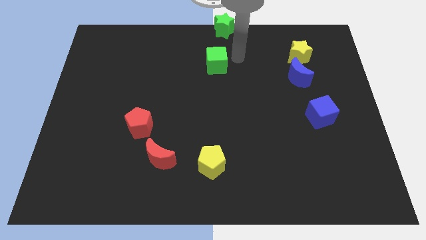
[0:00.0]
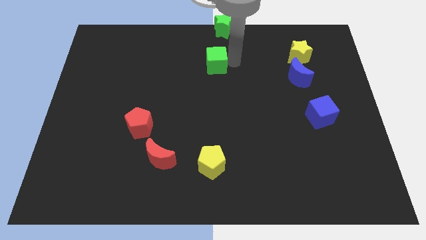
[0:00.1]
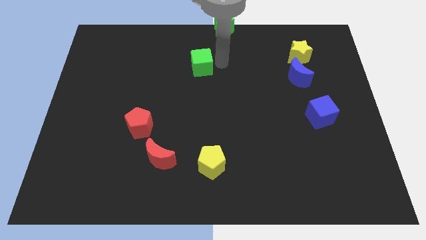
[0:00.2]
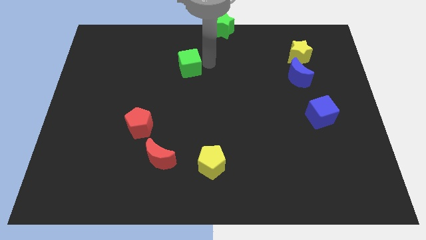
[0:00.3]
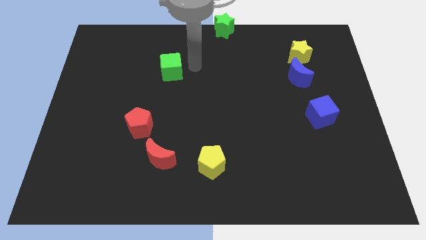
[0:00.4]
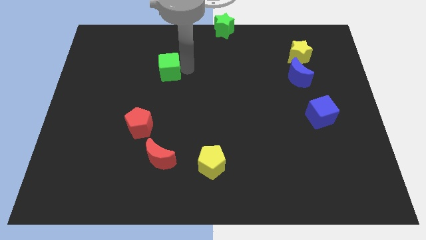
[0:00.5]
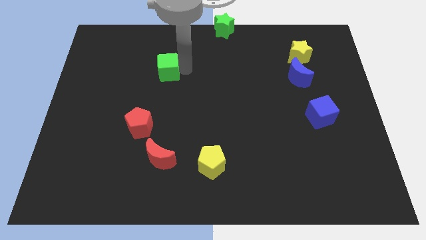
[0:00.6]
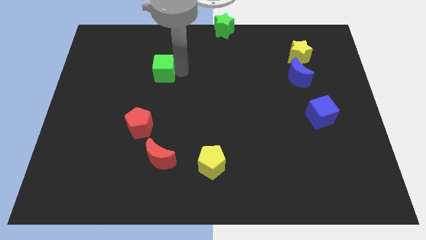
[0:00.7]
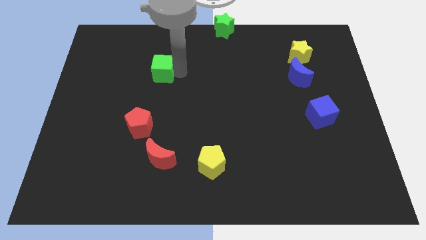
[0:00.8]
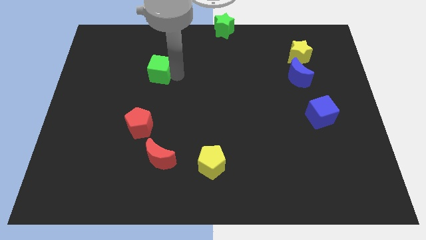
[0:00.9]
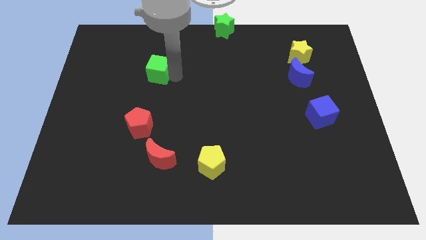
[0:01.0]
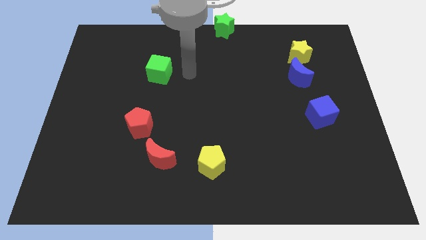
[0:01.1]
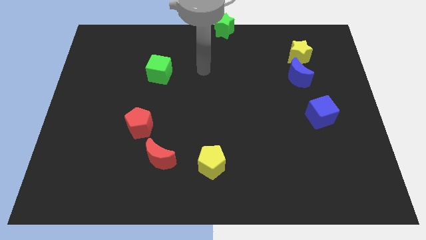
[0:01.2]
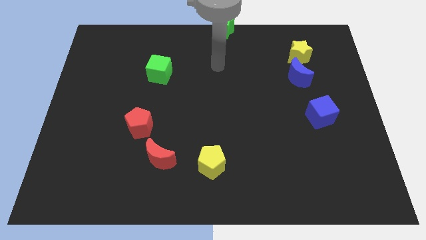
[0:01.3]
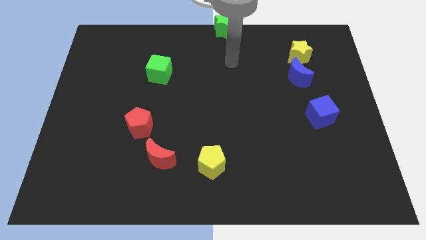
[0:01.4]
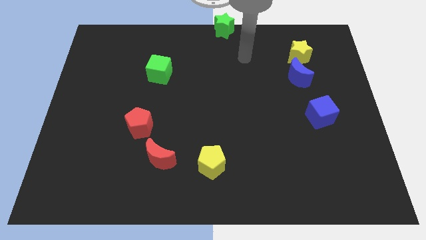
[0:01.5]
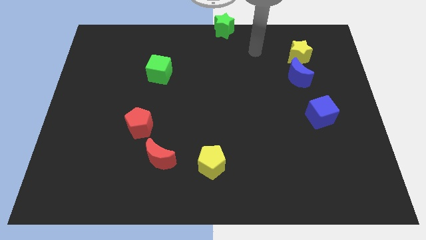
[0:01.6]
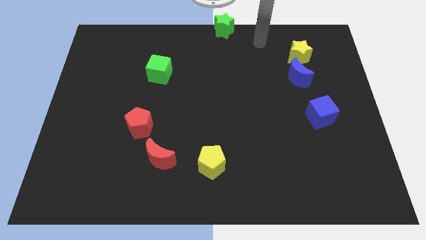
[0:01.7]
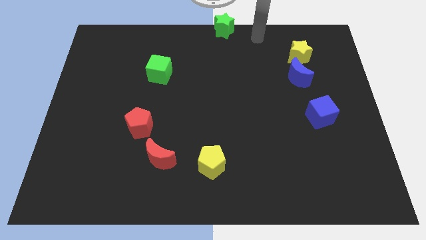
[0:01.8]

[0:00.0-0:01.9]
move green cube towards left side

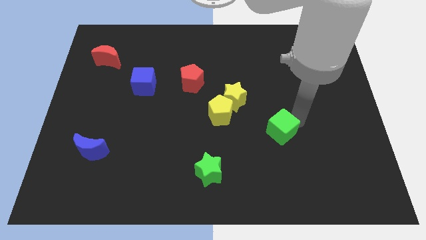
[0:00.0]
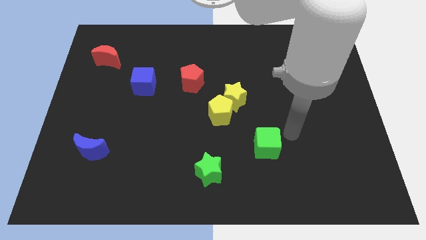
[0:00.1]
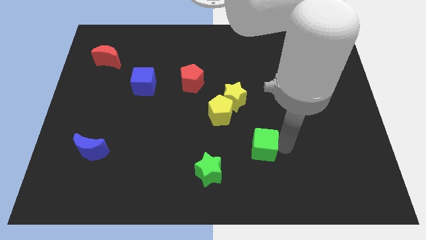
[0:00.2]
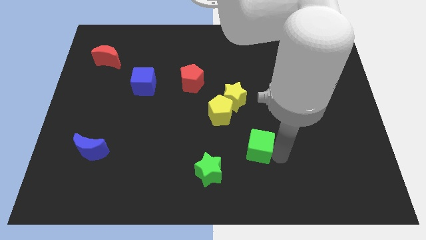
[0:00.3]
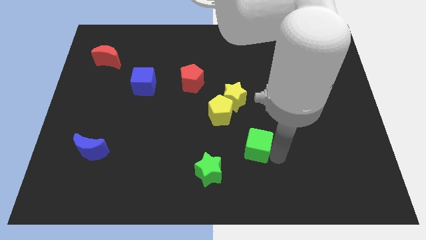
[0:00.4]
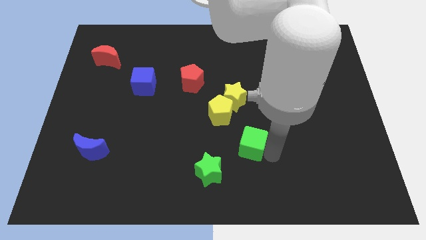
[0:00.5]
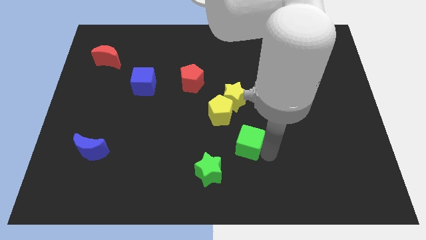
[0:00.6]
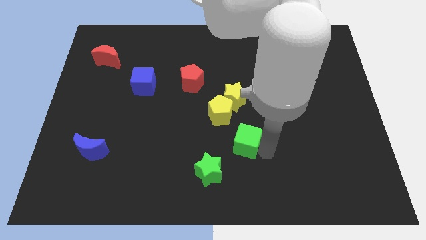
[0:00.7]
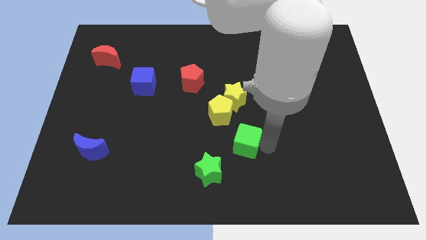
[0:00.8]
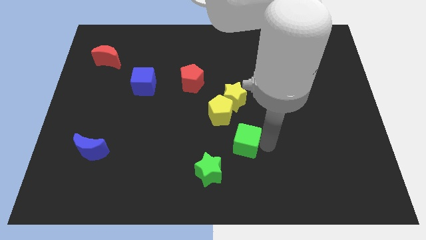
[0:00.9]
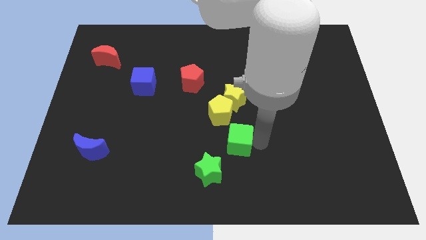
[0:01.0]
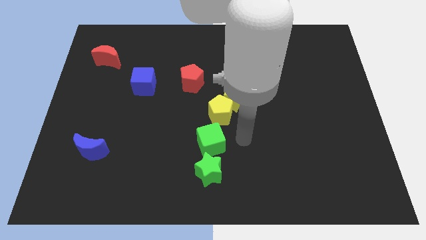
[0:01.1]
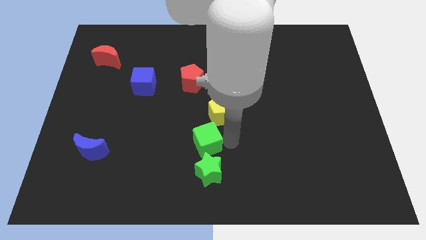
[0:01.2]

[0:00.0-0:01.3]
place green cube in between yellow pentagon and green star

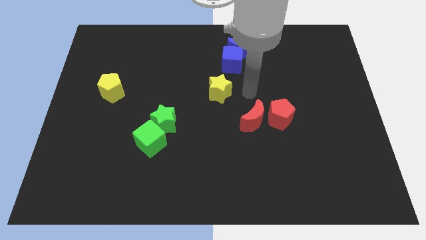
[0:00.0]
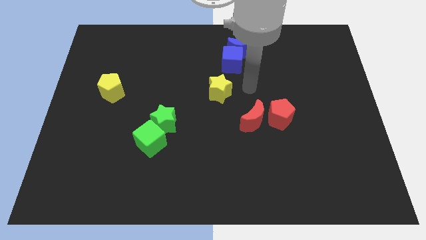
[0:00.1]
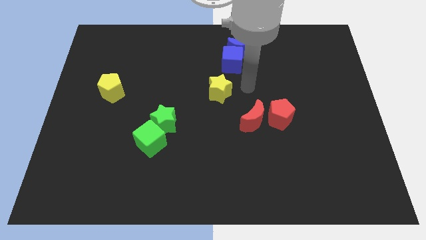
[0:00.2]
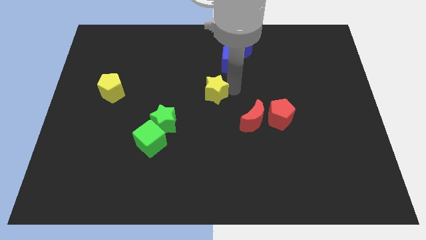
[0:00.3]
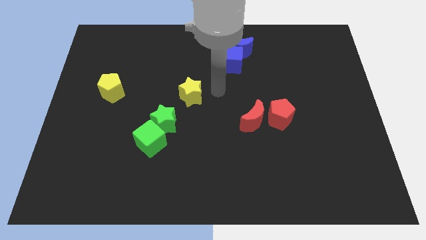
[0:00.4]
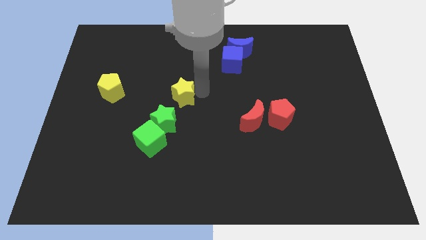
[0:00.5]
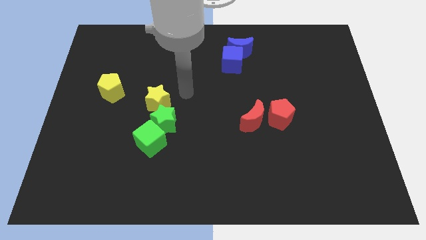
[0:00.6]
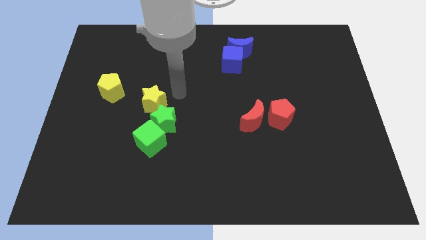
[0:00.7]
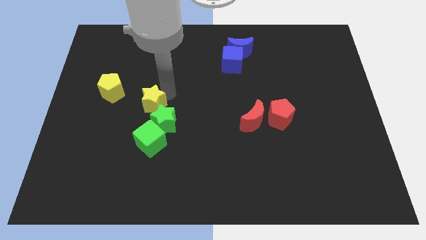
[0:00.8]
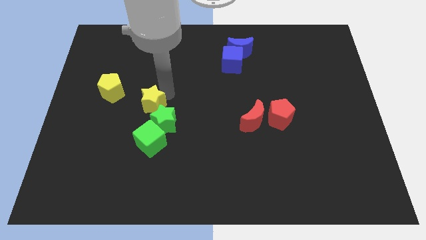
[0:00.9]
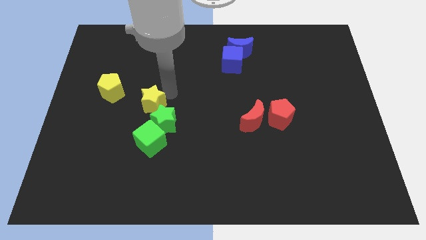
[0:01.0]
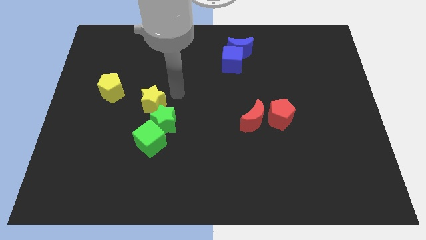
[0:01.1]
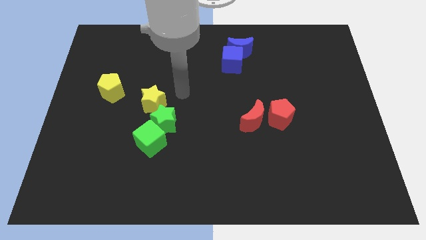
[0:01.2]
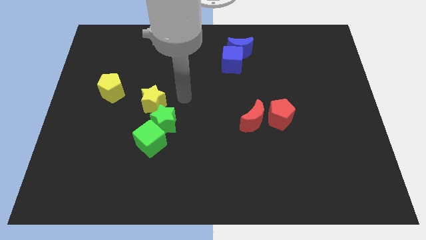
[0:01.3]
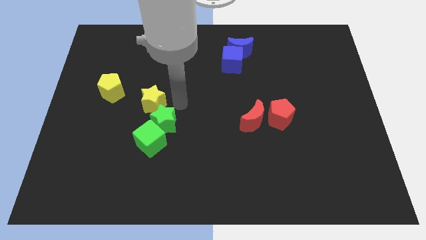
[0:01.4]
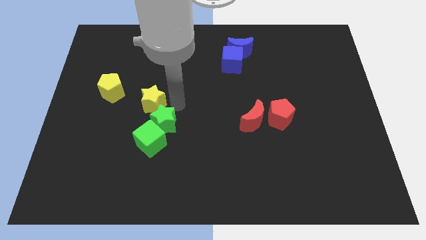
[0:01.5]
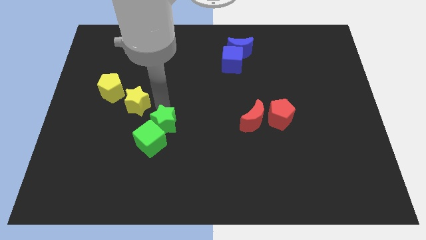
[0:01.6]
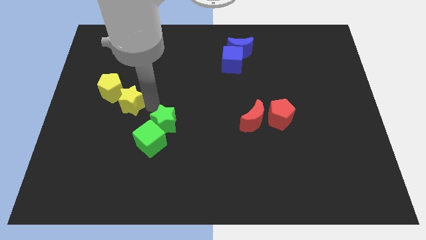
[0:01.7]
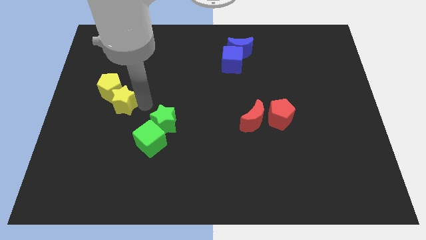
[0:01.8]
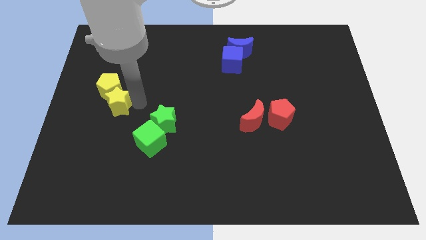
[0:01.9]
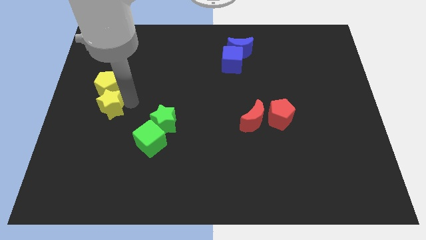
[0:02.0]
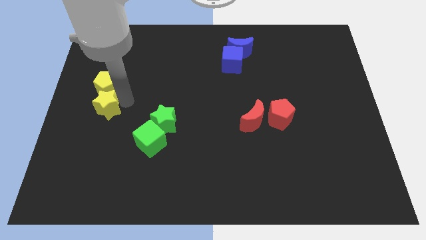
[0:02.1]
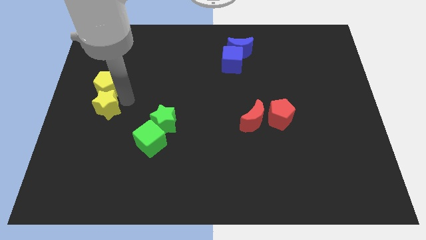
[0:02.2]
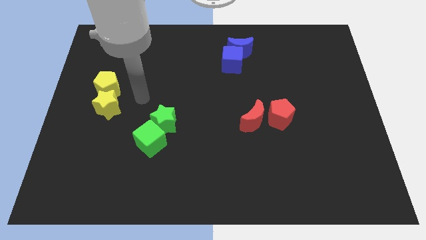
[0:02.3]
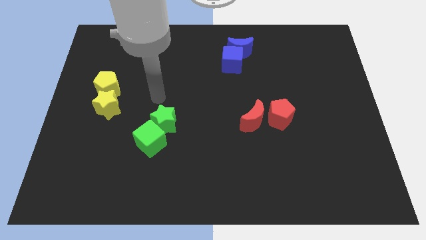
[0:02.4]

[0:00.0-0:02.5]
push yellow star into the yellow pentagon

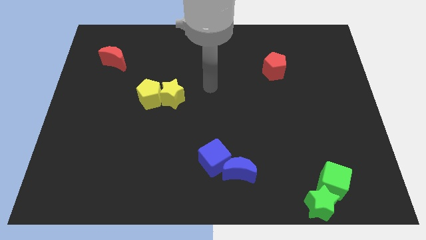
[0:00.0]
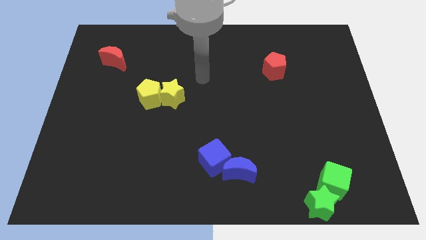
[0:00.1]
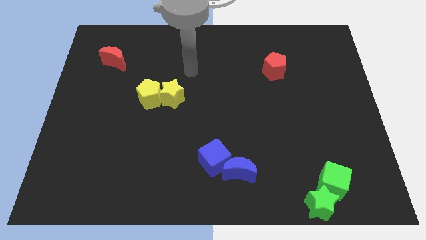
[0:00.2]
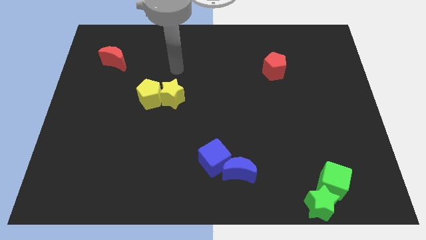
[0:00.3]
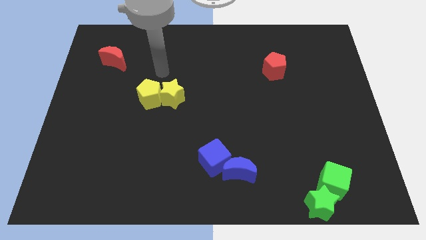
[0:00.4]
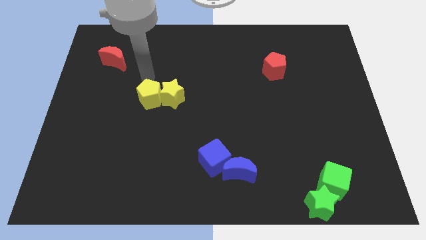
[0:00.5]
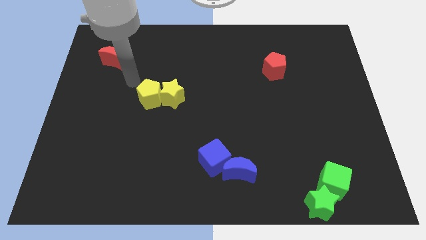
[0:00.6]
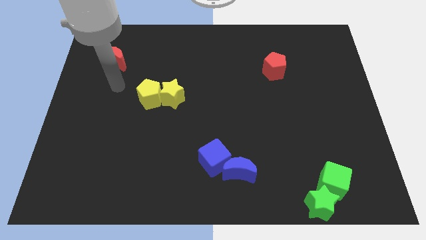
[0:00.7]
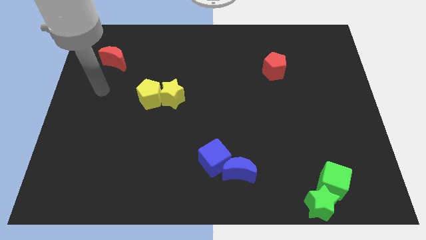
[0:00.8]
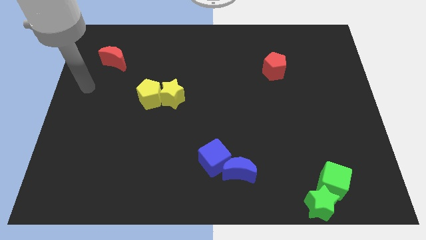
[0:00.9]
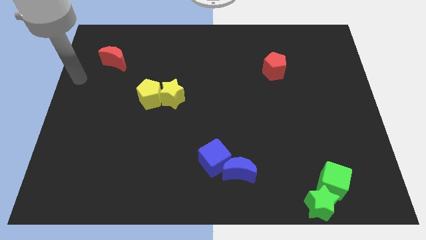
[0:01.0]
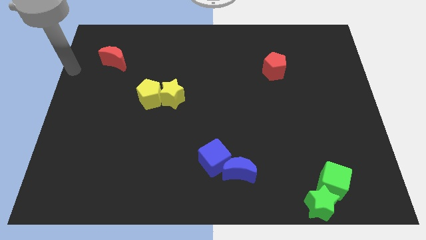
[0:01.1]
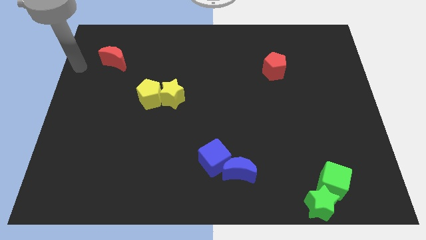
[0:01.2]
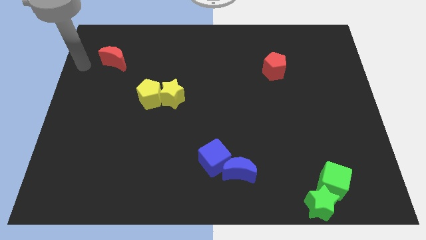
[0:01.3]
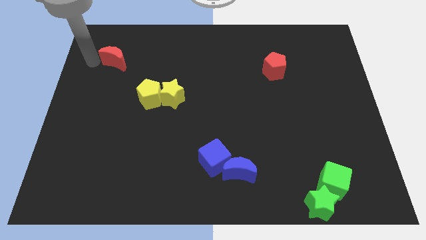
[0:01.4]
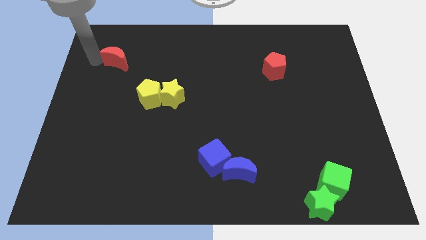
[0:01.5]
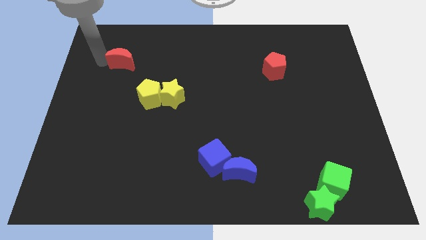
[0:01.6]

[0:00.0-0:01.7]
move your arm towards the red crescent

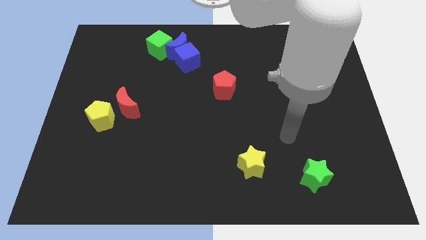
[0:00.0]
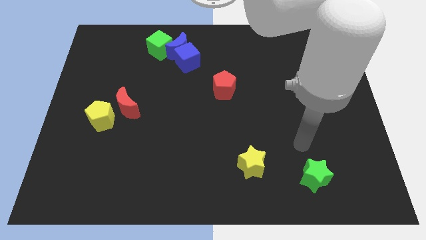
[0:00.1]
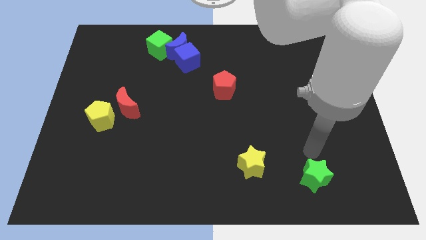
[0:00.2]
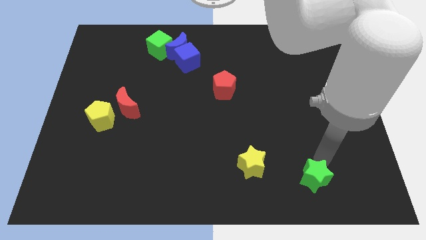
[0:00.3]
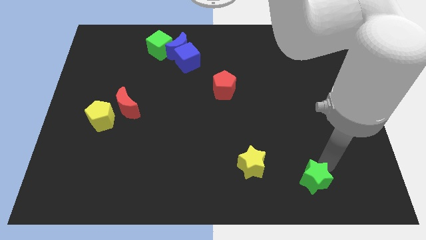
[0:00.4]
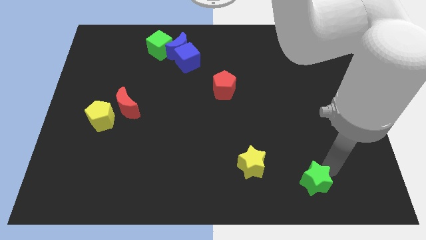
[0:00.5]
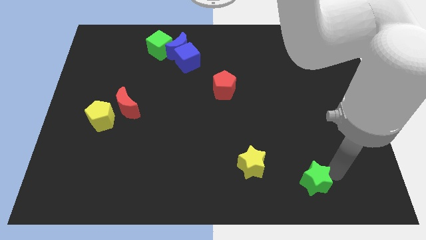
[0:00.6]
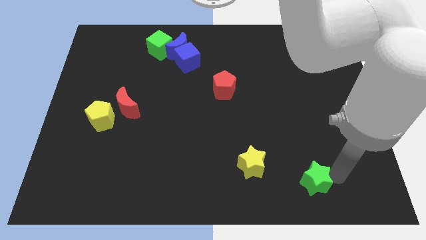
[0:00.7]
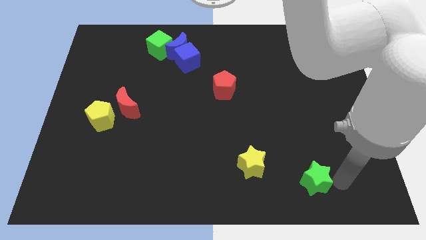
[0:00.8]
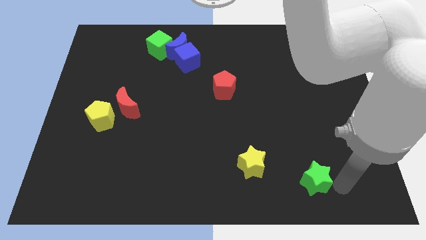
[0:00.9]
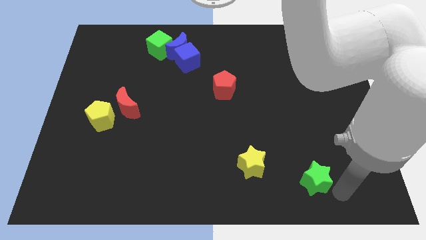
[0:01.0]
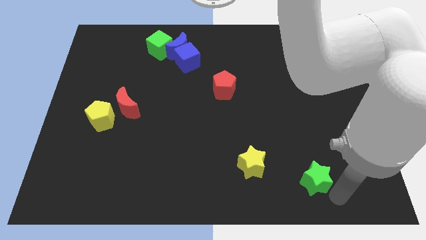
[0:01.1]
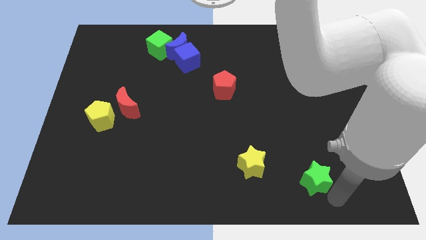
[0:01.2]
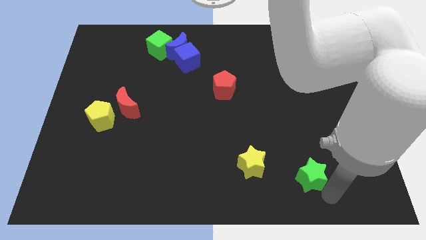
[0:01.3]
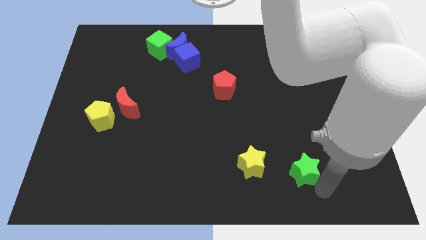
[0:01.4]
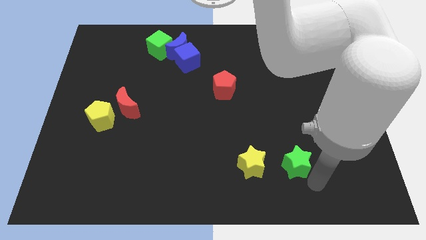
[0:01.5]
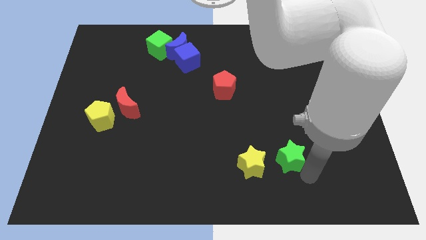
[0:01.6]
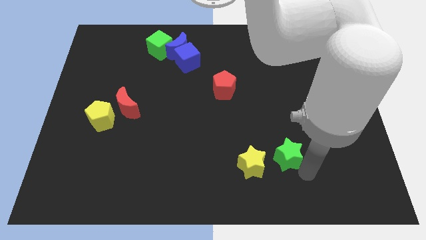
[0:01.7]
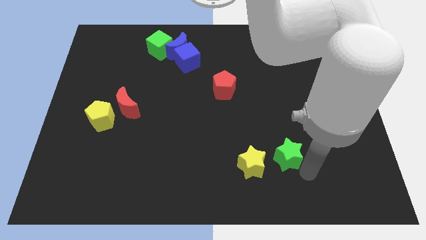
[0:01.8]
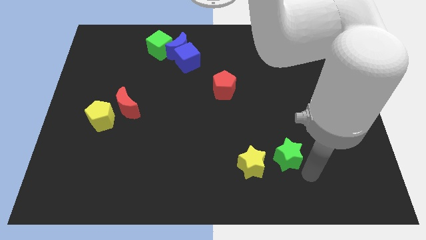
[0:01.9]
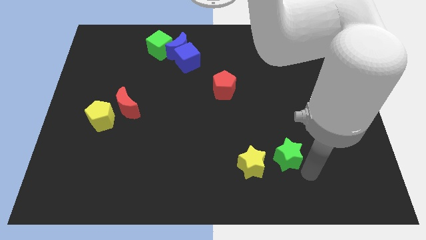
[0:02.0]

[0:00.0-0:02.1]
slide the green star right to the yellow star
